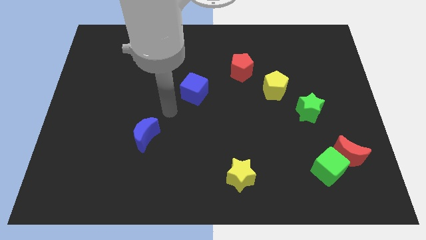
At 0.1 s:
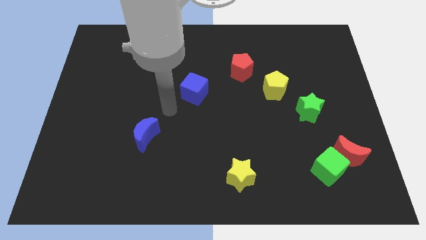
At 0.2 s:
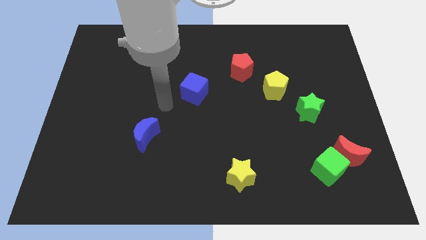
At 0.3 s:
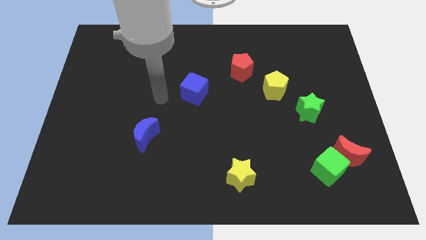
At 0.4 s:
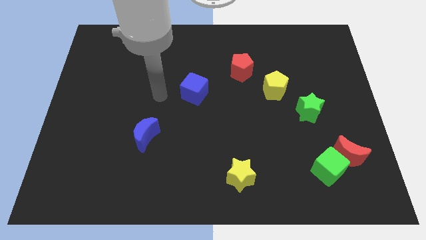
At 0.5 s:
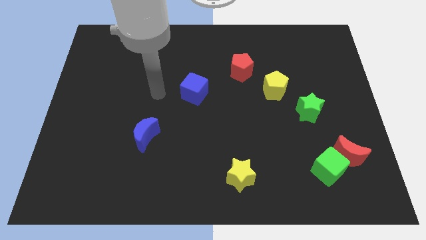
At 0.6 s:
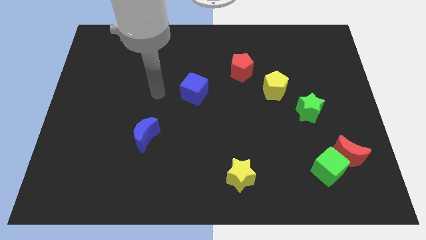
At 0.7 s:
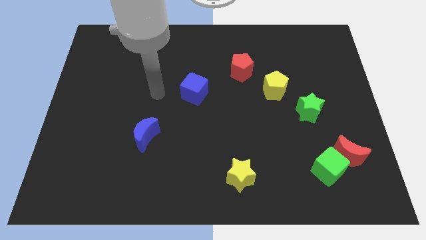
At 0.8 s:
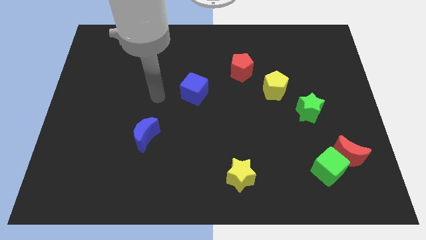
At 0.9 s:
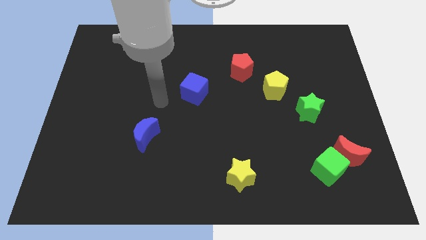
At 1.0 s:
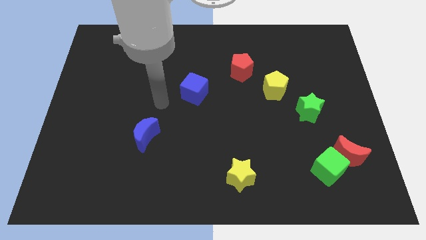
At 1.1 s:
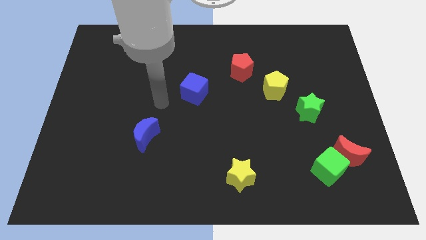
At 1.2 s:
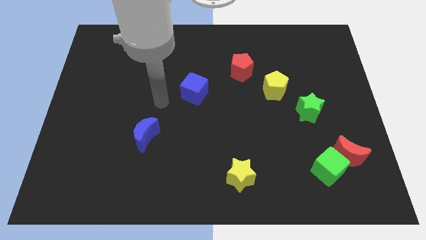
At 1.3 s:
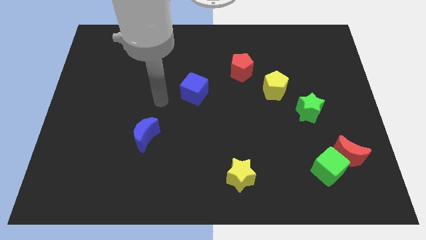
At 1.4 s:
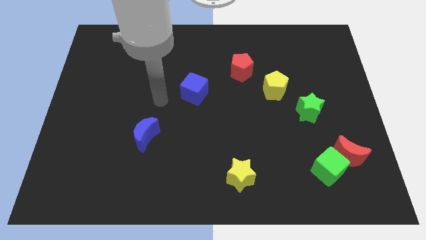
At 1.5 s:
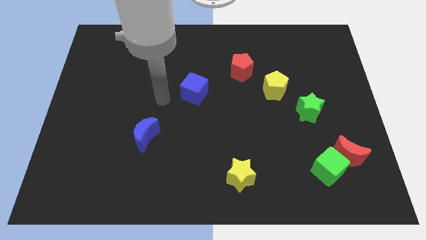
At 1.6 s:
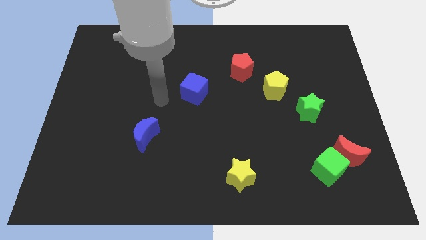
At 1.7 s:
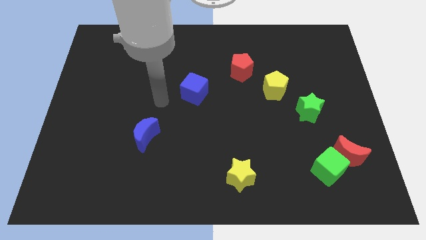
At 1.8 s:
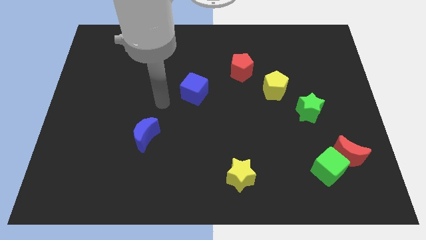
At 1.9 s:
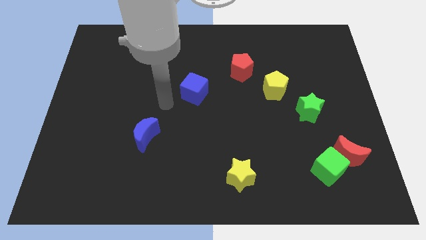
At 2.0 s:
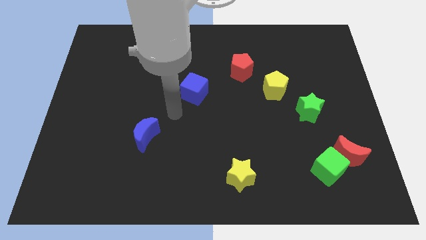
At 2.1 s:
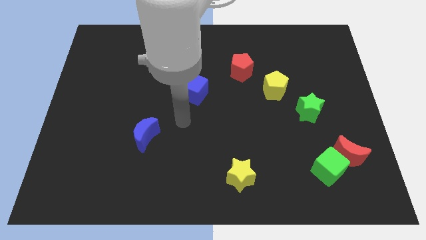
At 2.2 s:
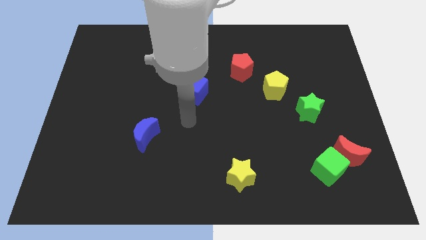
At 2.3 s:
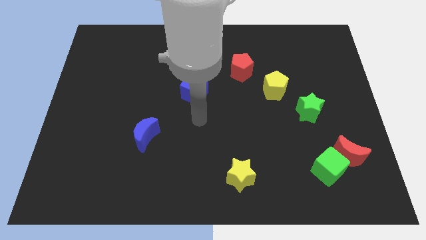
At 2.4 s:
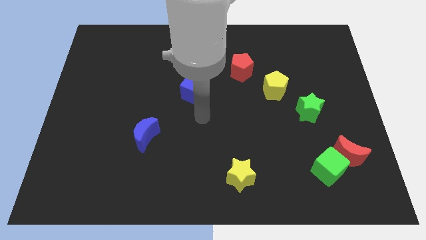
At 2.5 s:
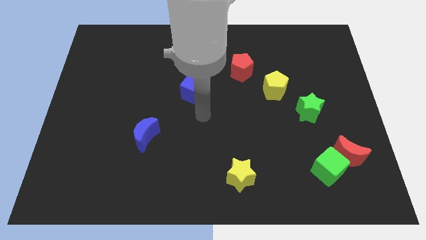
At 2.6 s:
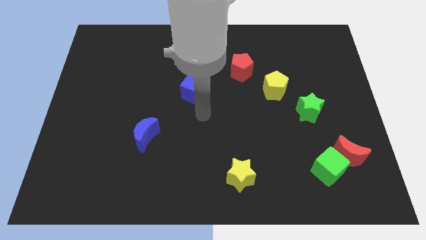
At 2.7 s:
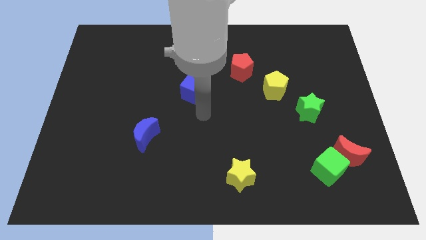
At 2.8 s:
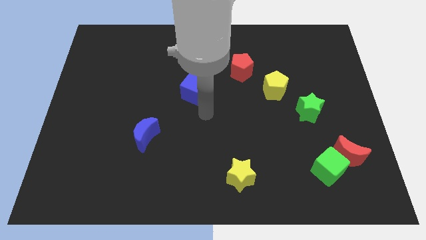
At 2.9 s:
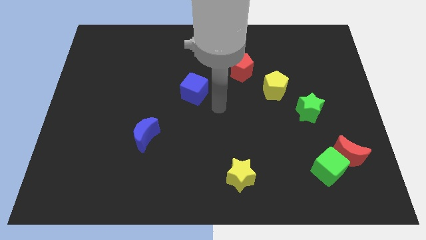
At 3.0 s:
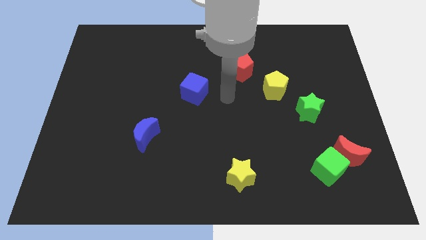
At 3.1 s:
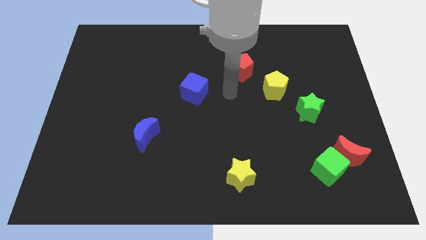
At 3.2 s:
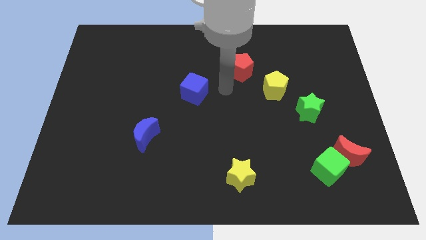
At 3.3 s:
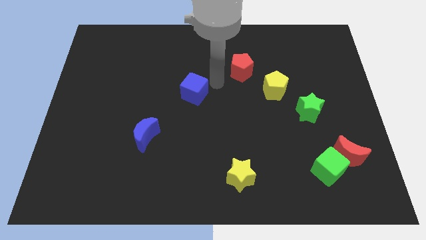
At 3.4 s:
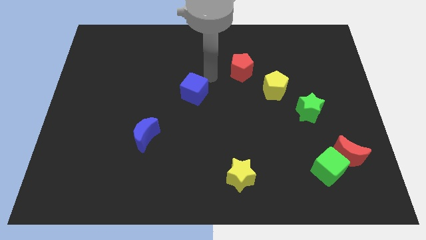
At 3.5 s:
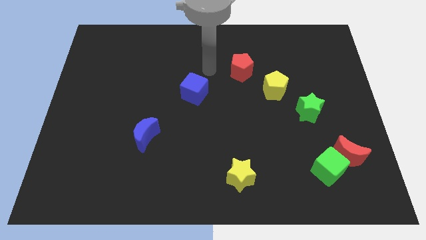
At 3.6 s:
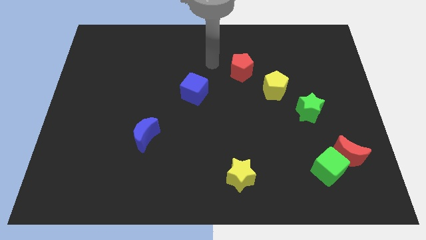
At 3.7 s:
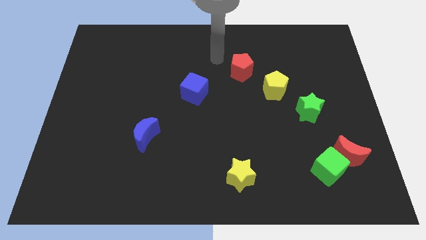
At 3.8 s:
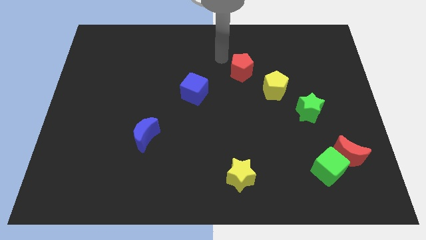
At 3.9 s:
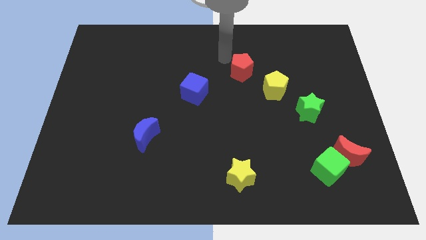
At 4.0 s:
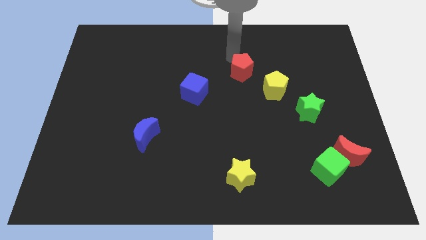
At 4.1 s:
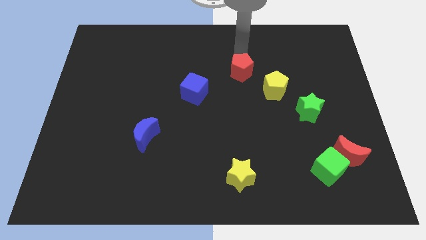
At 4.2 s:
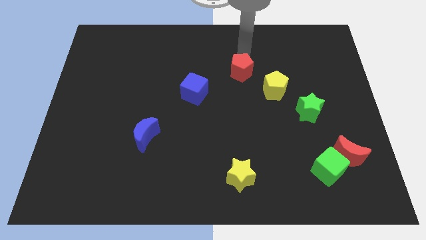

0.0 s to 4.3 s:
go away from the blue cube

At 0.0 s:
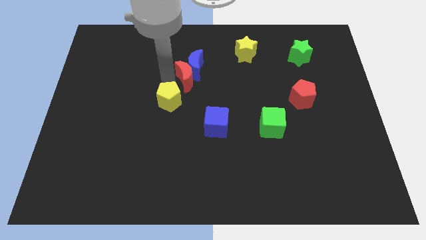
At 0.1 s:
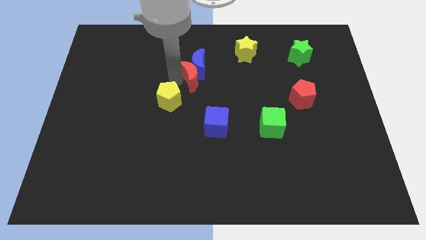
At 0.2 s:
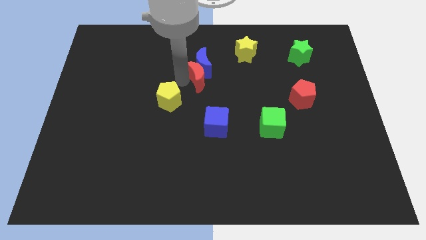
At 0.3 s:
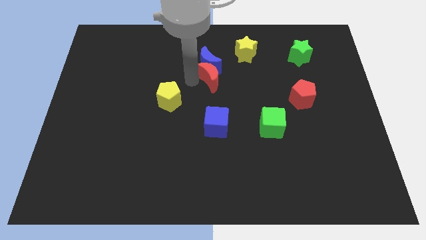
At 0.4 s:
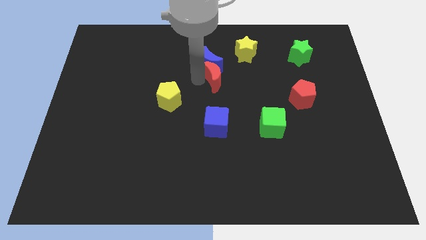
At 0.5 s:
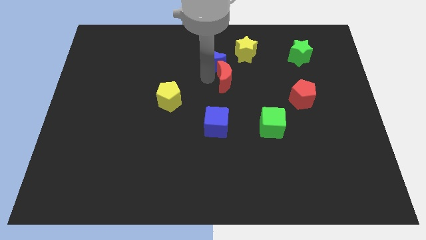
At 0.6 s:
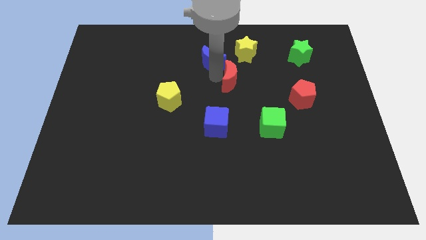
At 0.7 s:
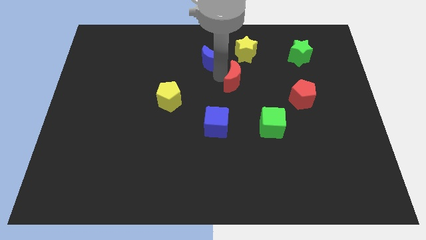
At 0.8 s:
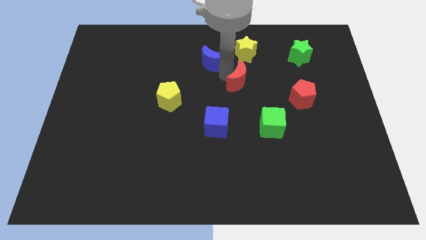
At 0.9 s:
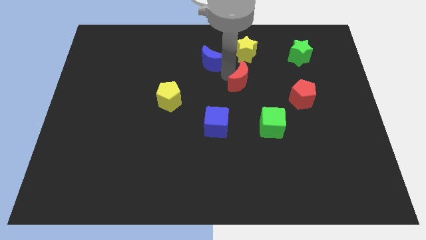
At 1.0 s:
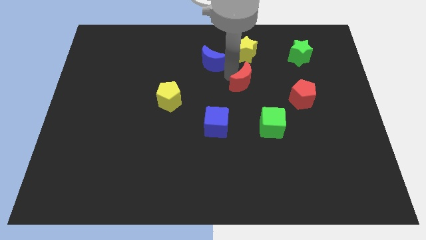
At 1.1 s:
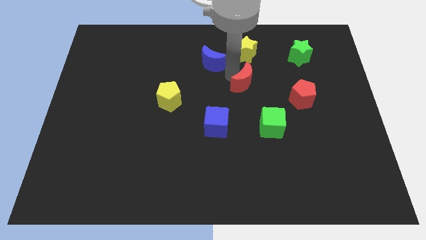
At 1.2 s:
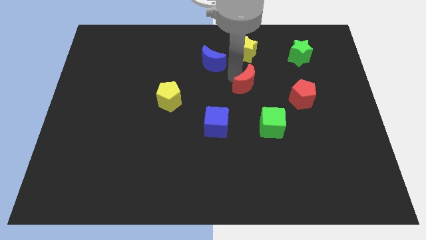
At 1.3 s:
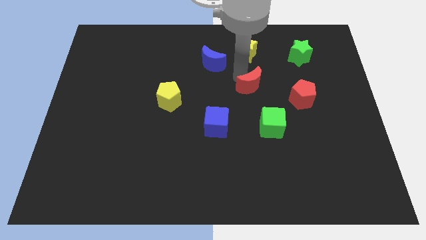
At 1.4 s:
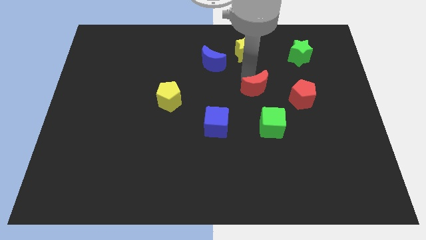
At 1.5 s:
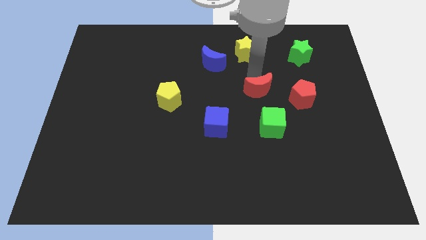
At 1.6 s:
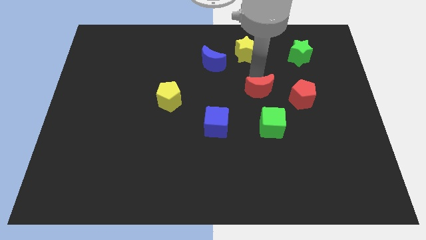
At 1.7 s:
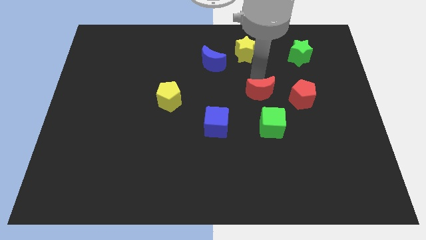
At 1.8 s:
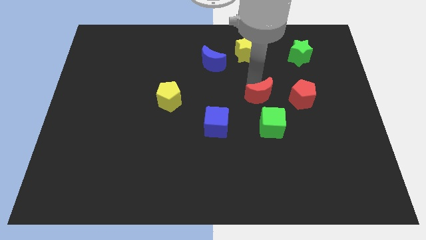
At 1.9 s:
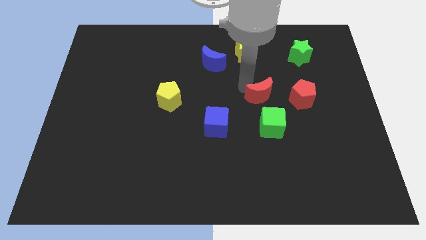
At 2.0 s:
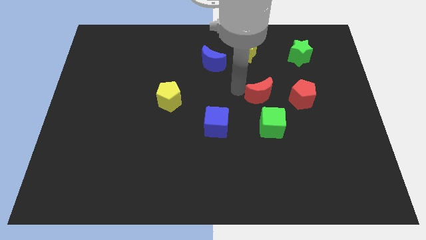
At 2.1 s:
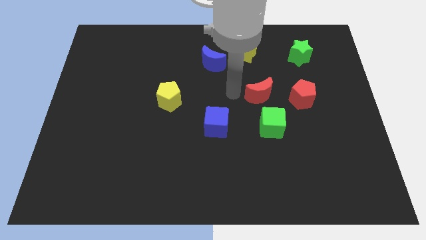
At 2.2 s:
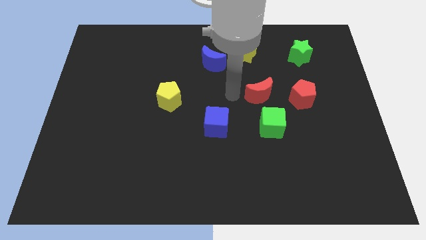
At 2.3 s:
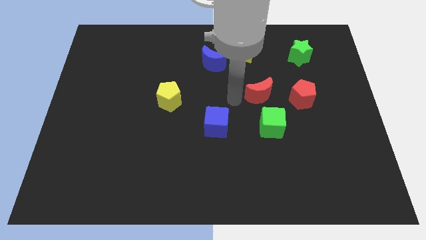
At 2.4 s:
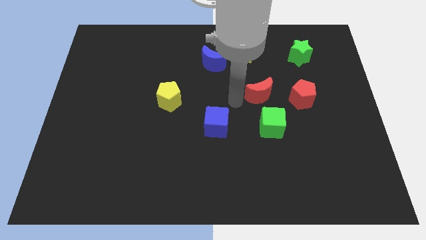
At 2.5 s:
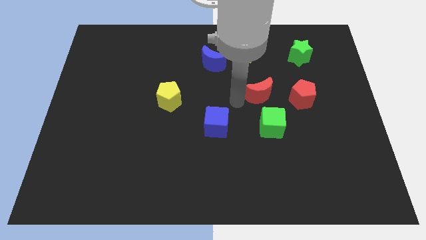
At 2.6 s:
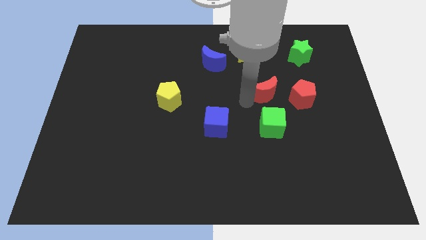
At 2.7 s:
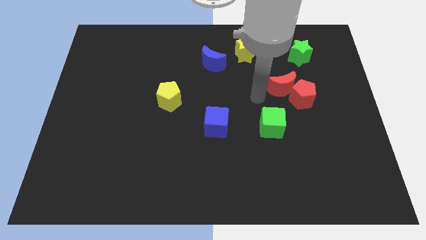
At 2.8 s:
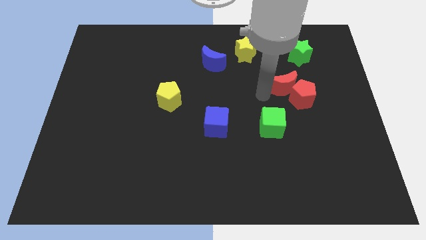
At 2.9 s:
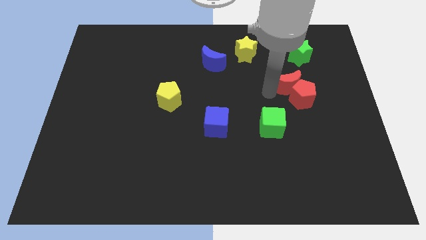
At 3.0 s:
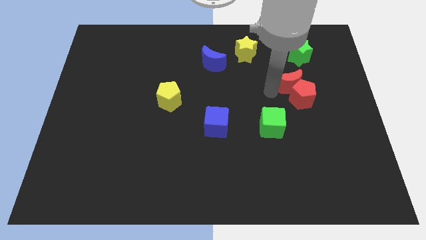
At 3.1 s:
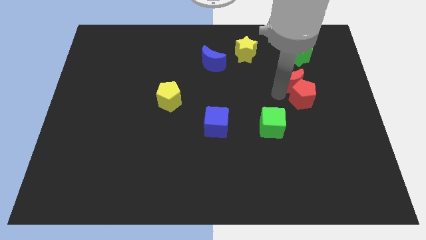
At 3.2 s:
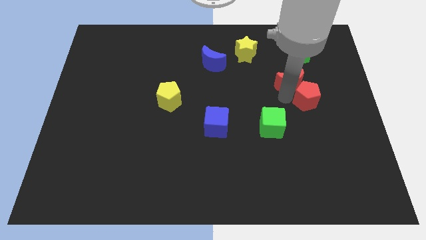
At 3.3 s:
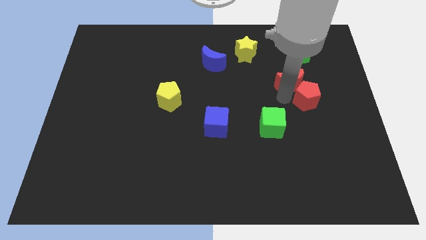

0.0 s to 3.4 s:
move the red moon into red pentagon

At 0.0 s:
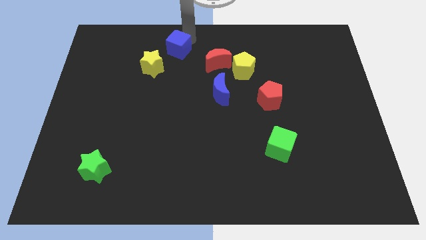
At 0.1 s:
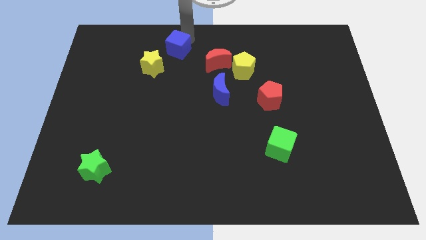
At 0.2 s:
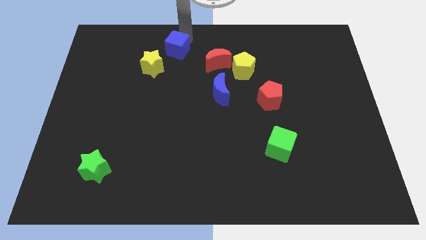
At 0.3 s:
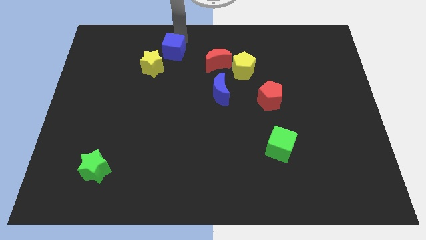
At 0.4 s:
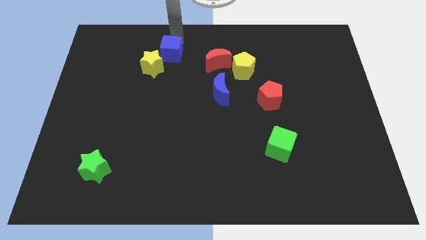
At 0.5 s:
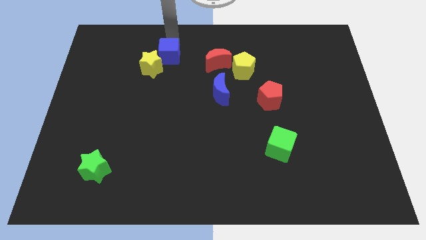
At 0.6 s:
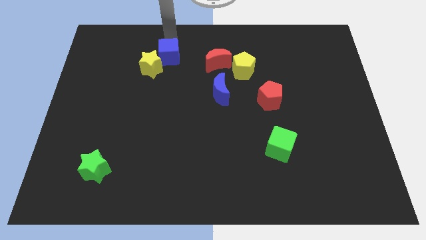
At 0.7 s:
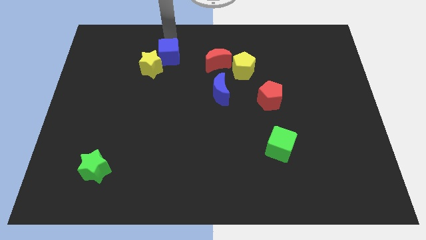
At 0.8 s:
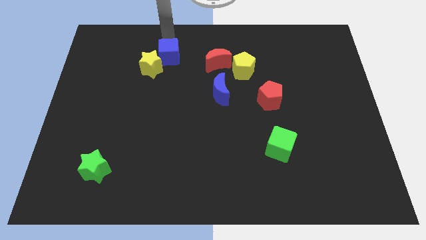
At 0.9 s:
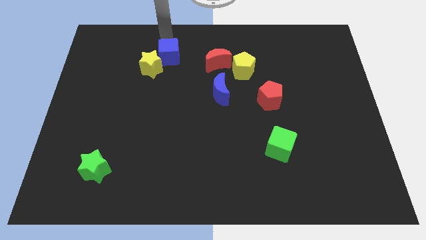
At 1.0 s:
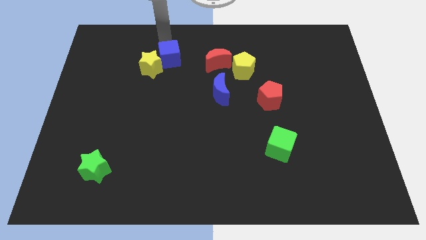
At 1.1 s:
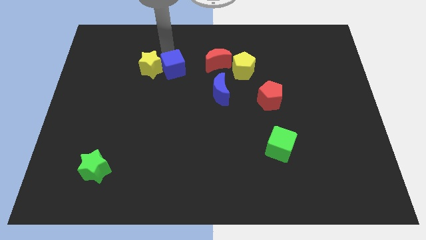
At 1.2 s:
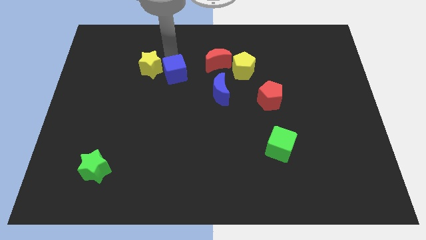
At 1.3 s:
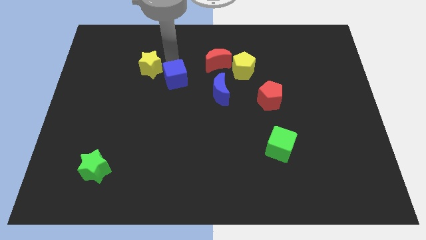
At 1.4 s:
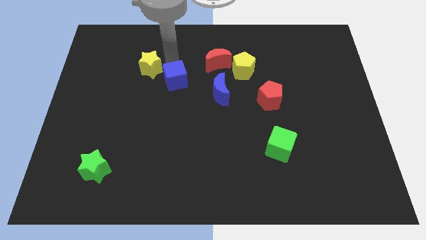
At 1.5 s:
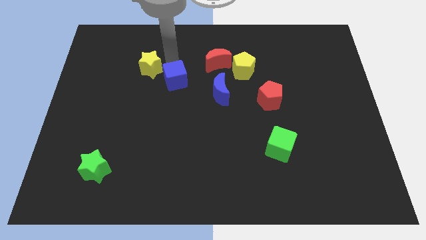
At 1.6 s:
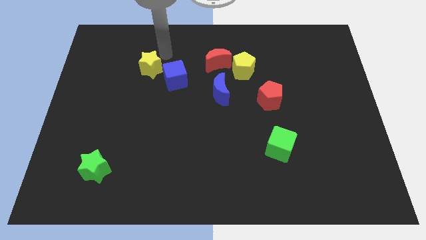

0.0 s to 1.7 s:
push the blue cube close to the yellow star
